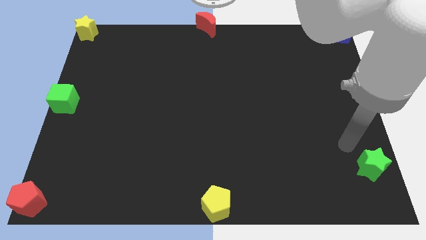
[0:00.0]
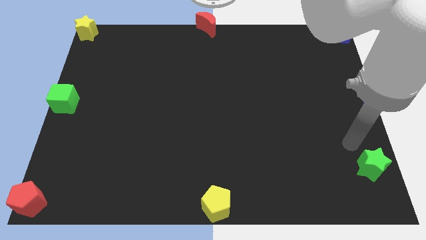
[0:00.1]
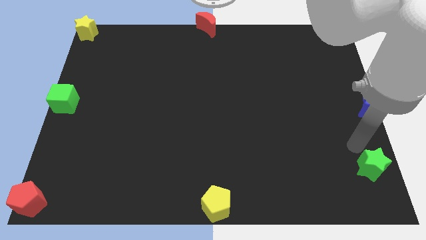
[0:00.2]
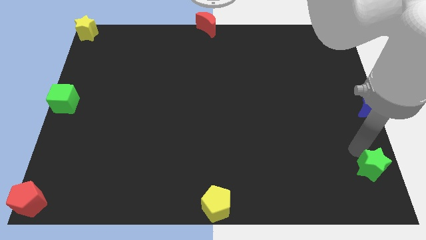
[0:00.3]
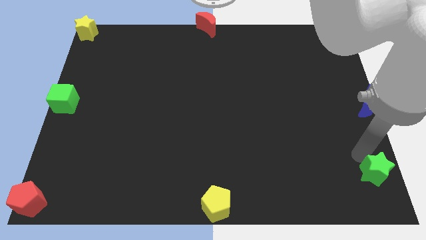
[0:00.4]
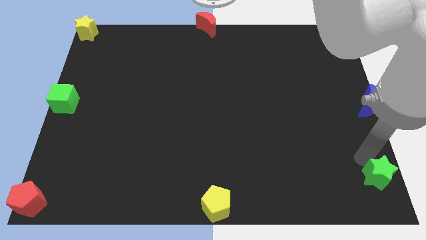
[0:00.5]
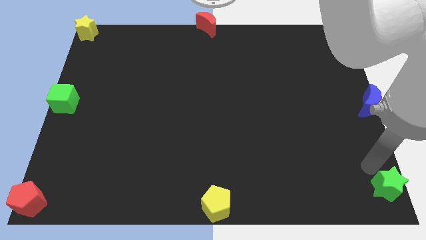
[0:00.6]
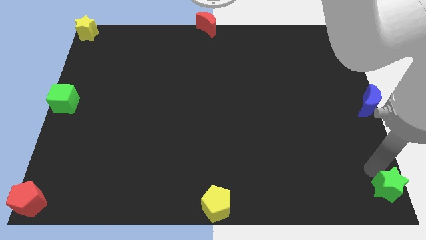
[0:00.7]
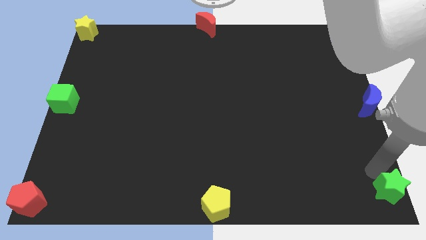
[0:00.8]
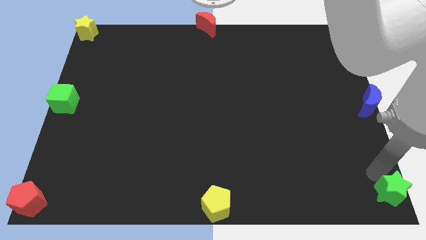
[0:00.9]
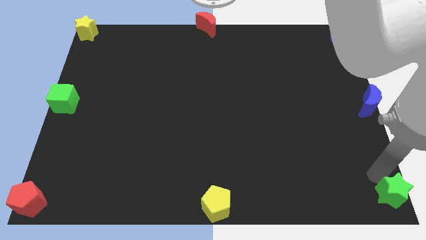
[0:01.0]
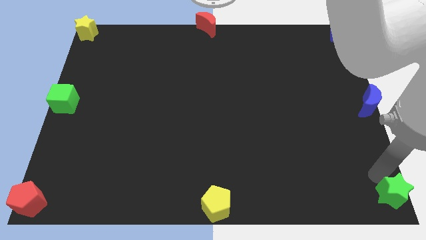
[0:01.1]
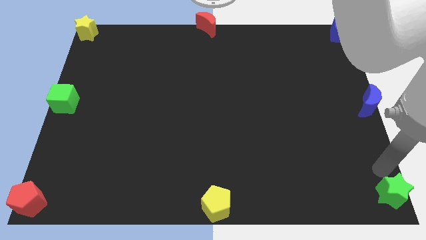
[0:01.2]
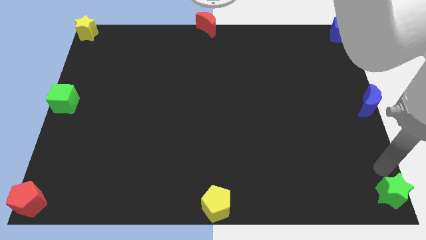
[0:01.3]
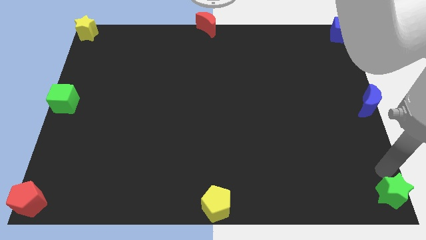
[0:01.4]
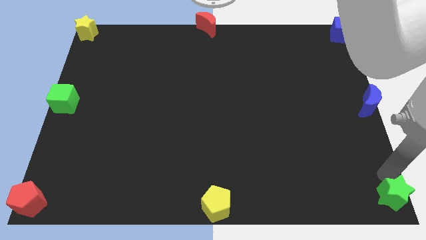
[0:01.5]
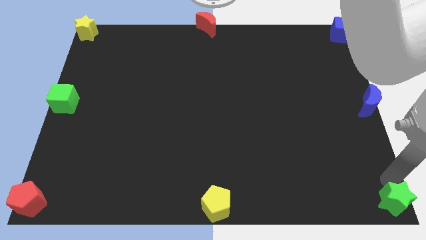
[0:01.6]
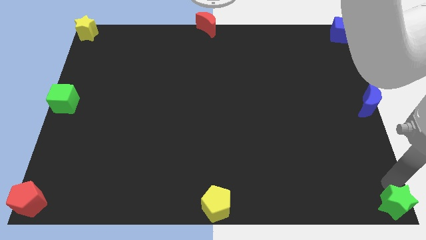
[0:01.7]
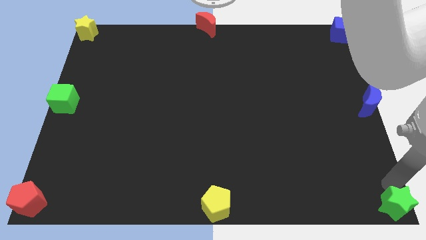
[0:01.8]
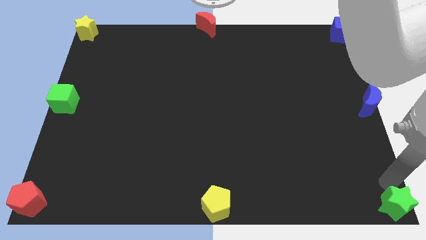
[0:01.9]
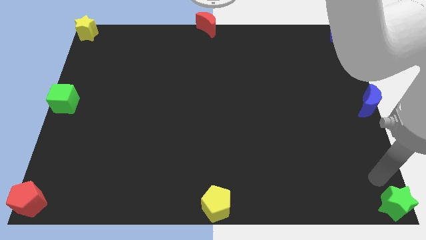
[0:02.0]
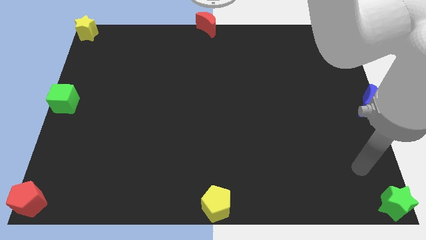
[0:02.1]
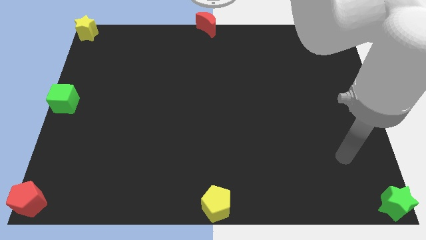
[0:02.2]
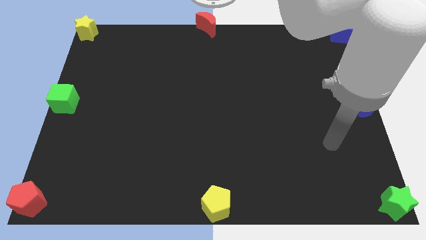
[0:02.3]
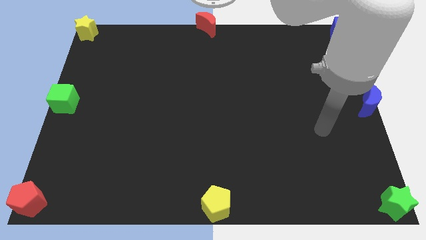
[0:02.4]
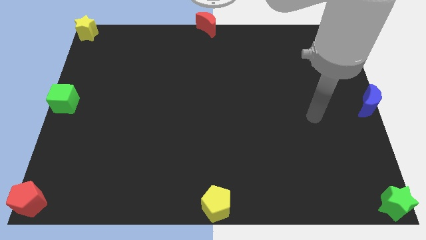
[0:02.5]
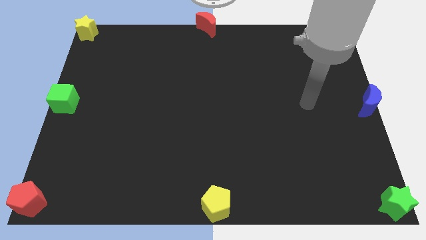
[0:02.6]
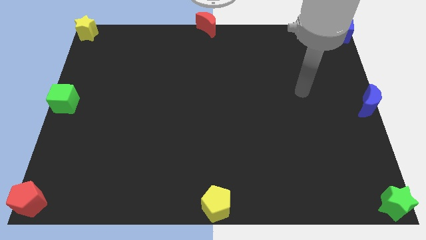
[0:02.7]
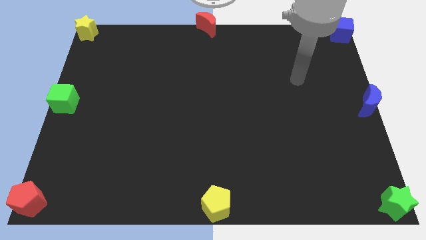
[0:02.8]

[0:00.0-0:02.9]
place the green star to the bottom right corner

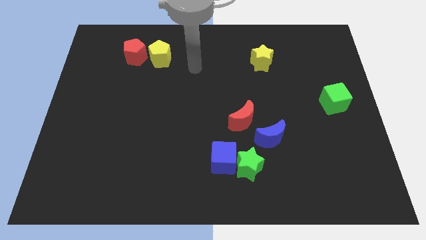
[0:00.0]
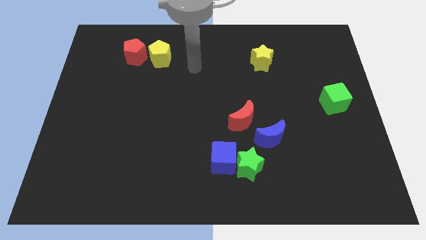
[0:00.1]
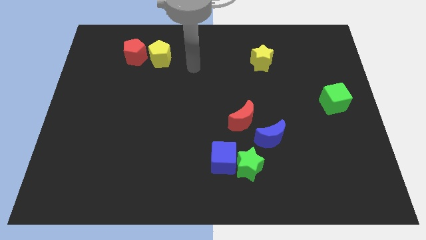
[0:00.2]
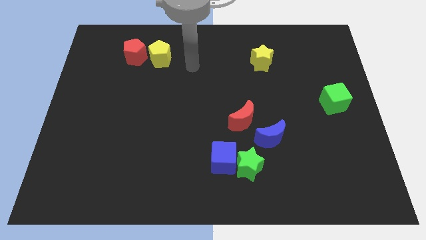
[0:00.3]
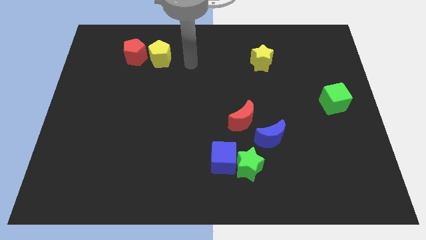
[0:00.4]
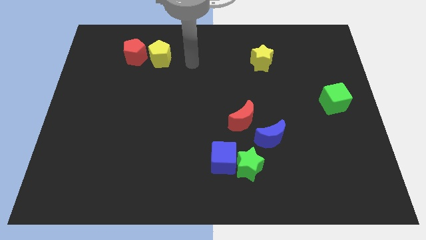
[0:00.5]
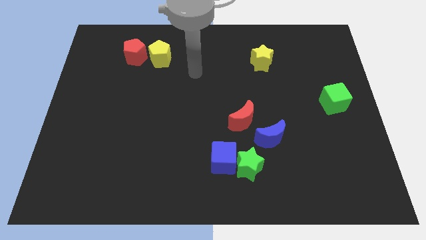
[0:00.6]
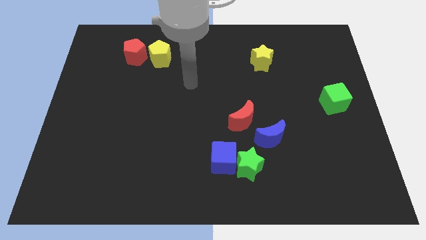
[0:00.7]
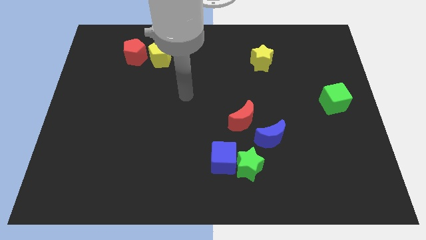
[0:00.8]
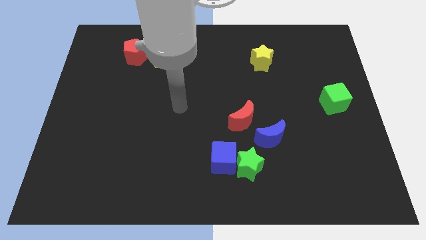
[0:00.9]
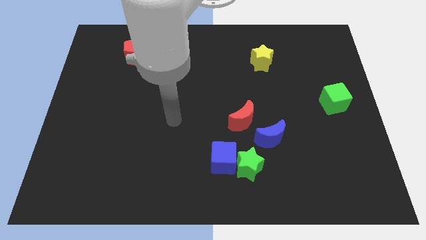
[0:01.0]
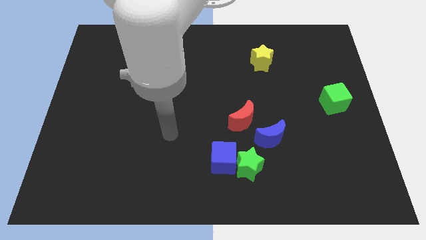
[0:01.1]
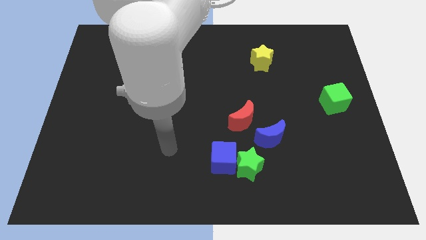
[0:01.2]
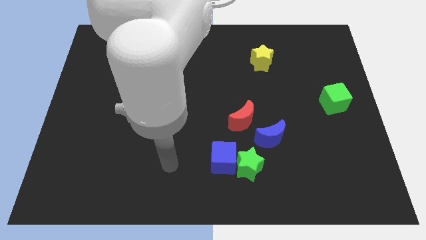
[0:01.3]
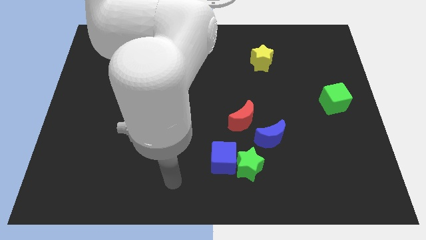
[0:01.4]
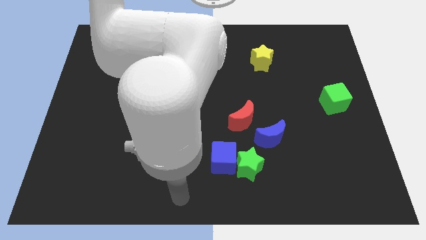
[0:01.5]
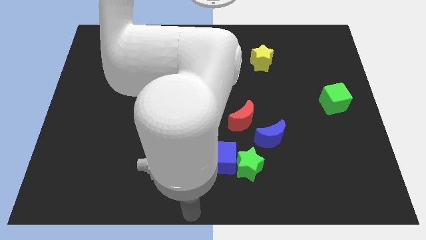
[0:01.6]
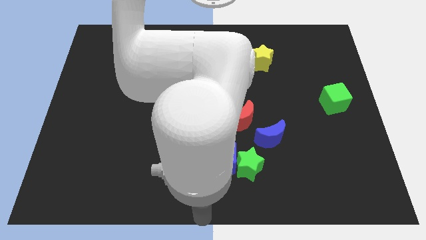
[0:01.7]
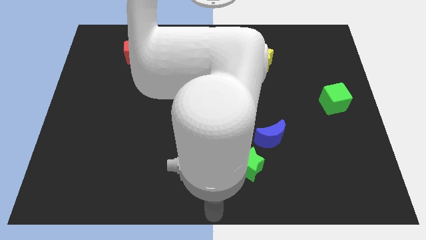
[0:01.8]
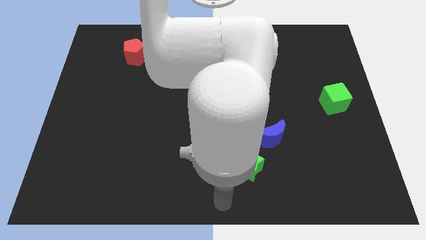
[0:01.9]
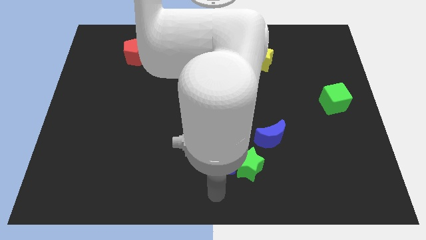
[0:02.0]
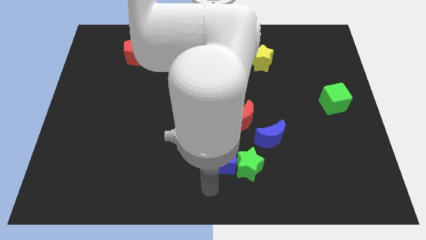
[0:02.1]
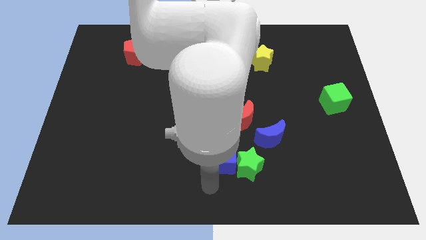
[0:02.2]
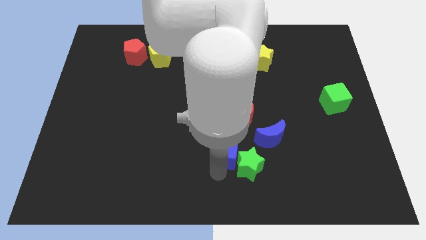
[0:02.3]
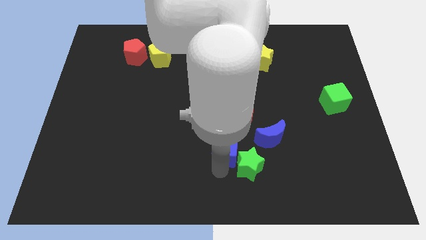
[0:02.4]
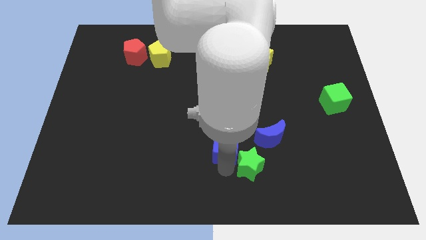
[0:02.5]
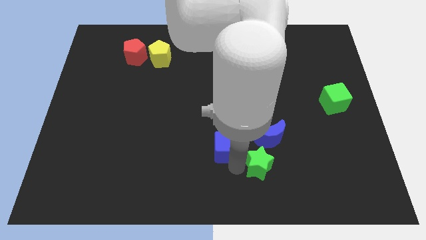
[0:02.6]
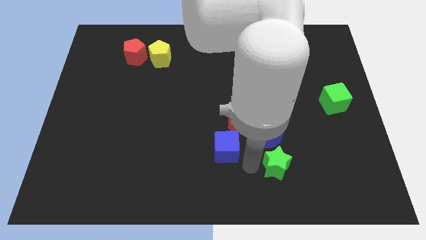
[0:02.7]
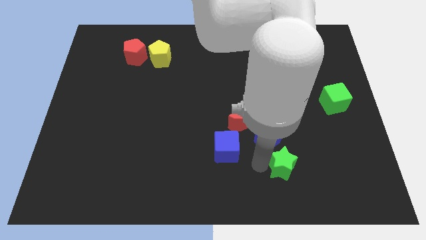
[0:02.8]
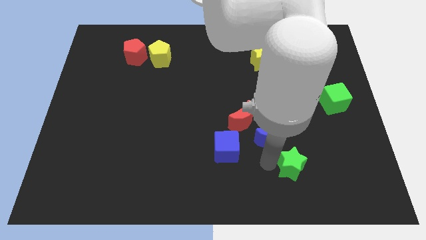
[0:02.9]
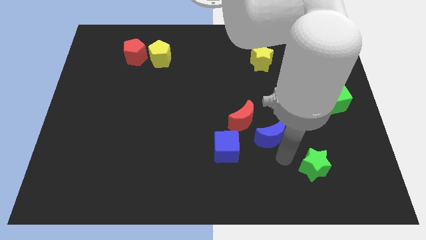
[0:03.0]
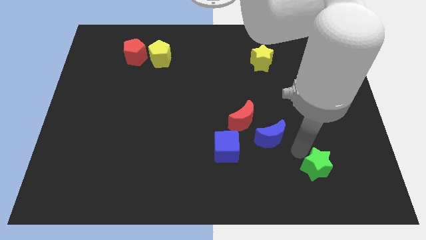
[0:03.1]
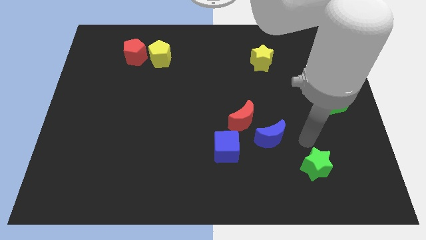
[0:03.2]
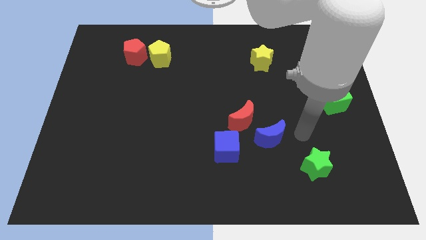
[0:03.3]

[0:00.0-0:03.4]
push the green star slightly towards right

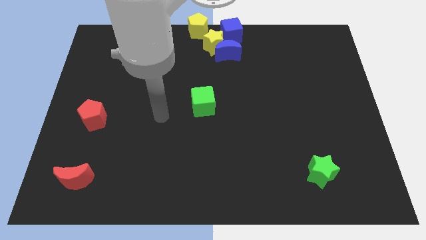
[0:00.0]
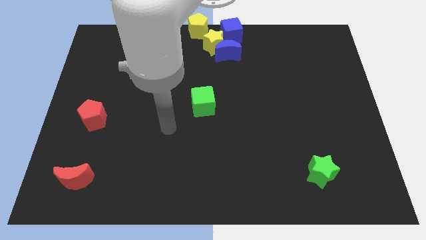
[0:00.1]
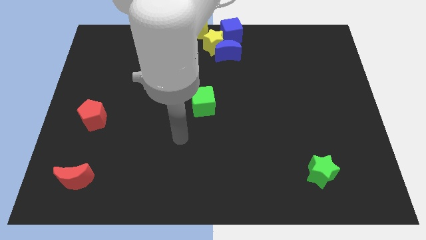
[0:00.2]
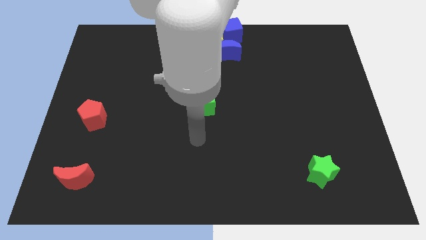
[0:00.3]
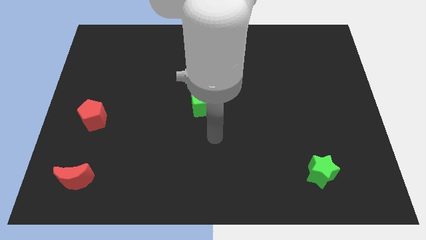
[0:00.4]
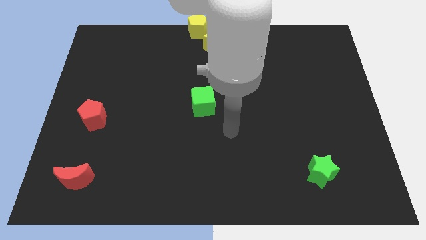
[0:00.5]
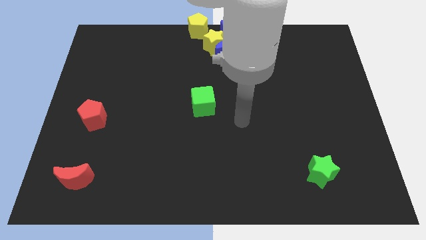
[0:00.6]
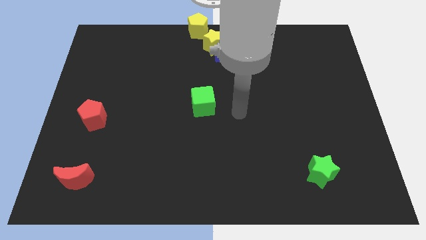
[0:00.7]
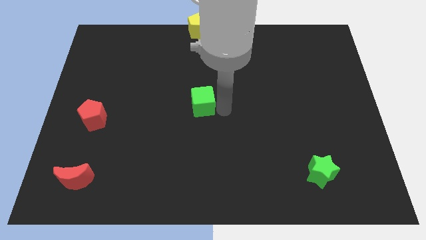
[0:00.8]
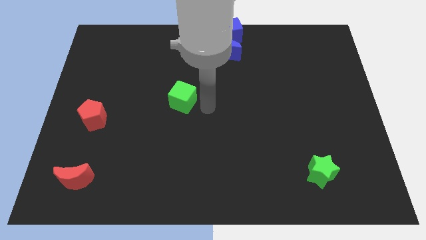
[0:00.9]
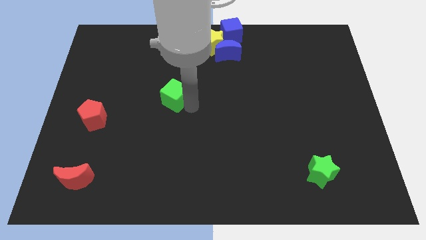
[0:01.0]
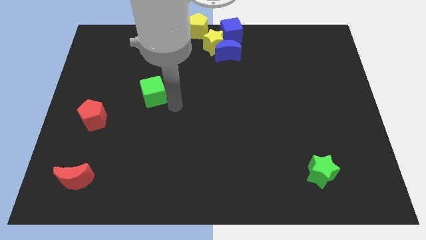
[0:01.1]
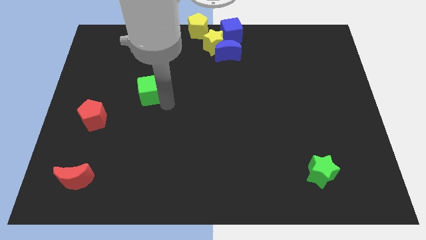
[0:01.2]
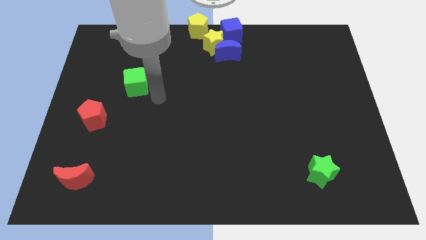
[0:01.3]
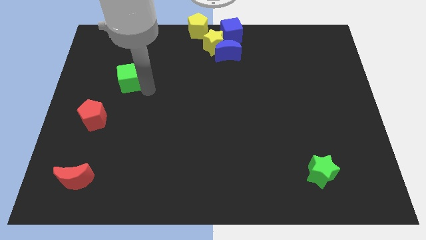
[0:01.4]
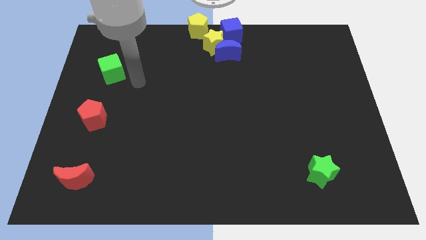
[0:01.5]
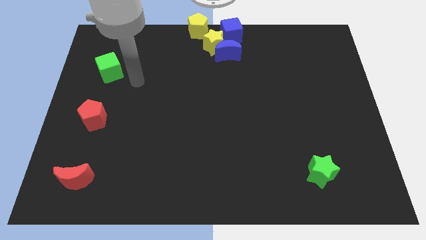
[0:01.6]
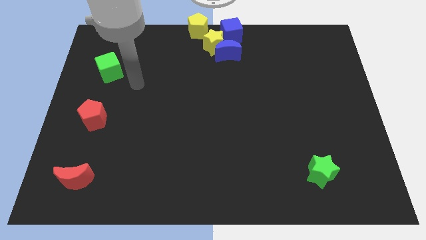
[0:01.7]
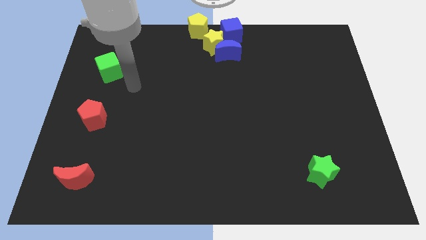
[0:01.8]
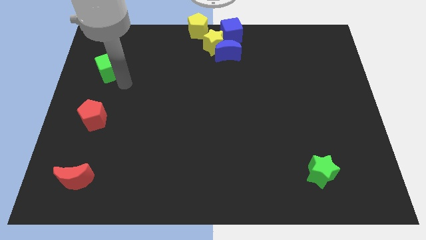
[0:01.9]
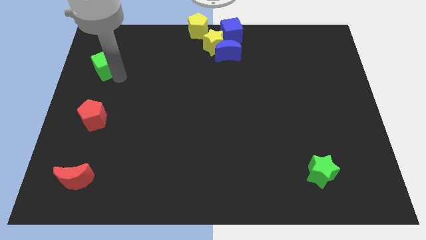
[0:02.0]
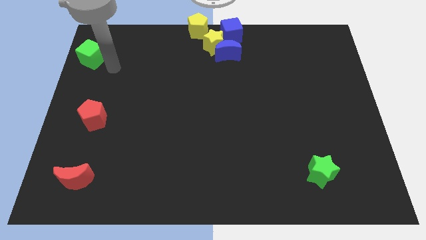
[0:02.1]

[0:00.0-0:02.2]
push the green cube towards the left top side of the board

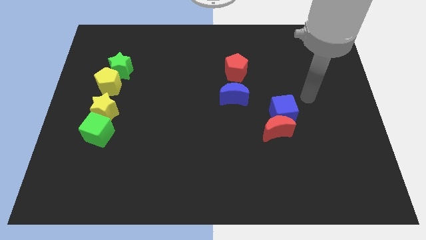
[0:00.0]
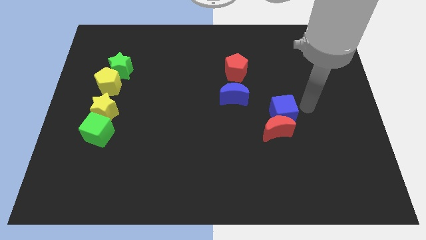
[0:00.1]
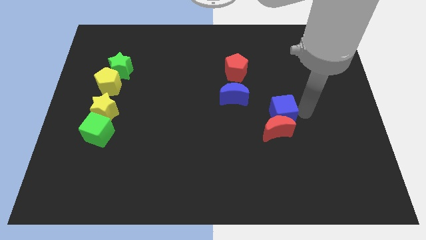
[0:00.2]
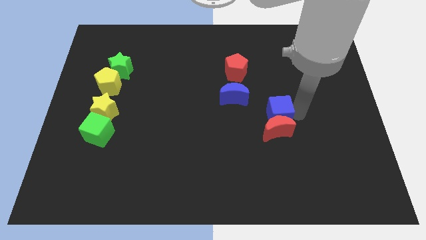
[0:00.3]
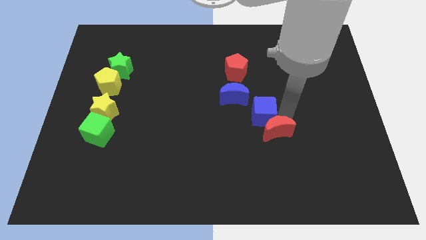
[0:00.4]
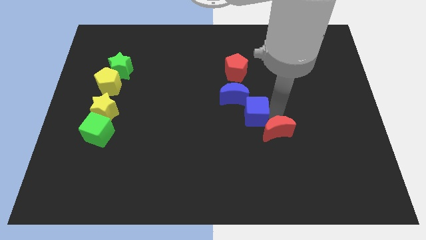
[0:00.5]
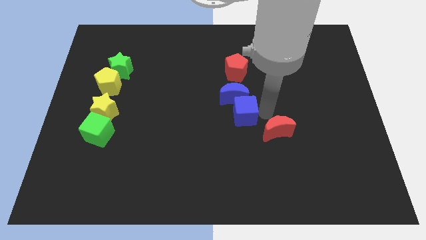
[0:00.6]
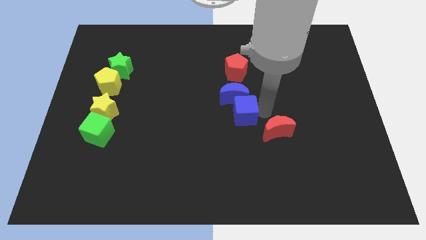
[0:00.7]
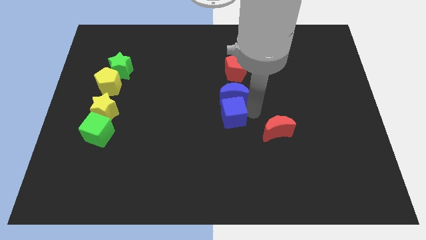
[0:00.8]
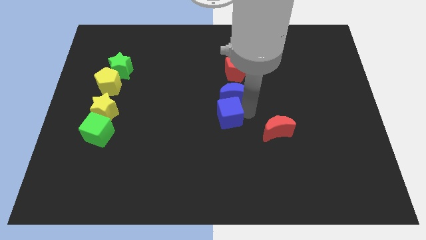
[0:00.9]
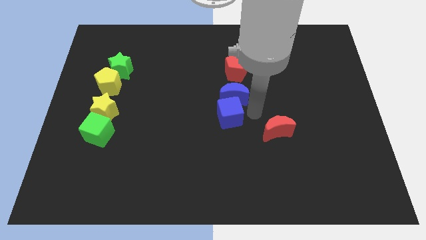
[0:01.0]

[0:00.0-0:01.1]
push blue cube below blue crescent
